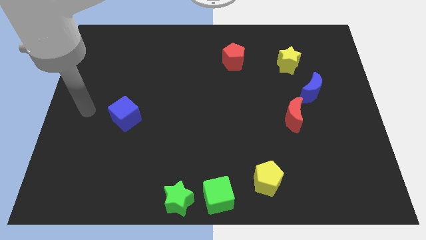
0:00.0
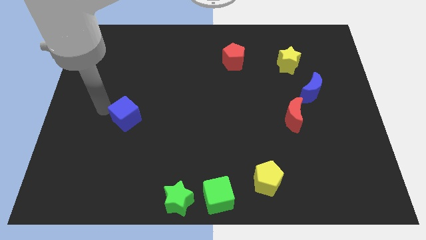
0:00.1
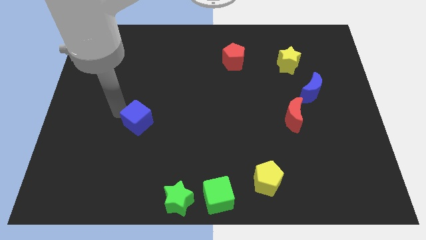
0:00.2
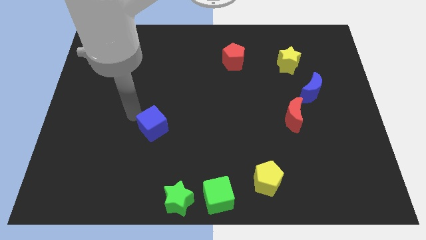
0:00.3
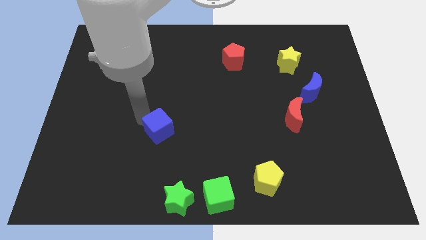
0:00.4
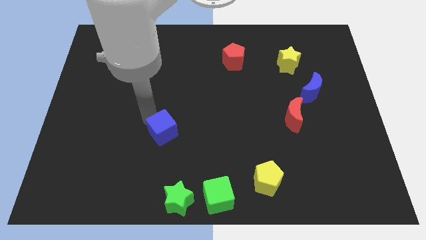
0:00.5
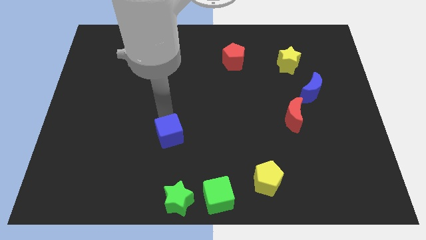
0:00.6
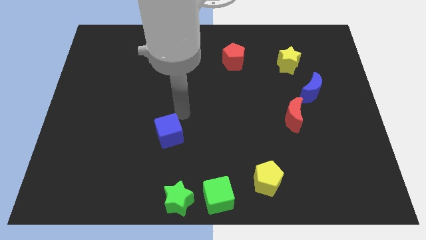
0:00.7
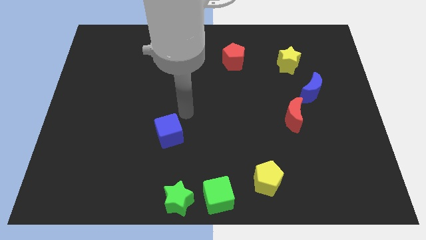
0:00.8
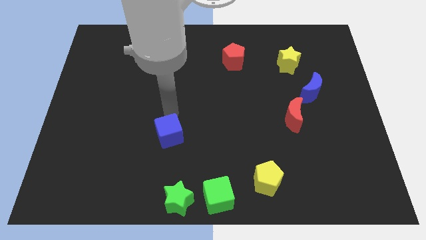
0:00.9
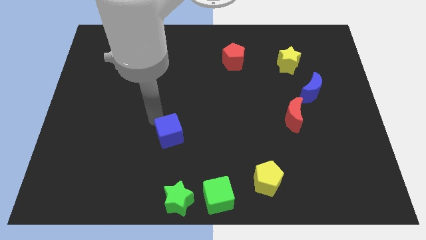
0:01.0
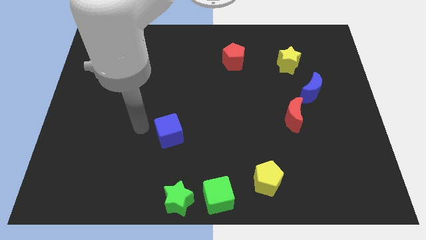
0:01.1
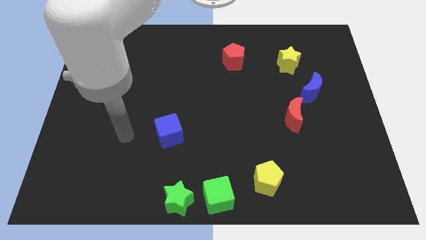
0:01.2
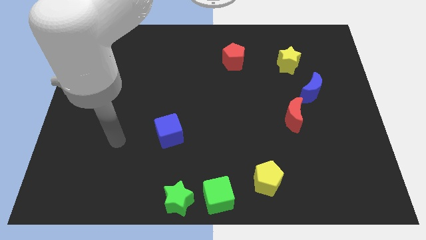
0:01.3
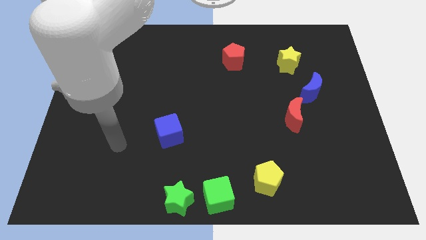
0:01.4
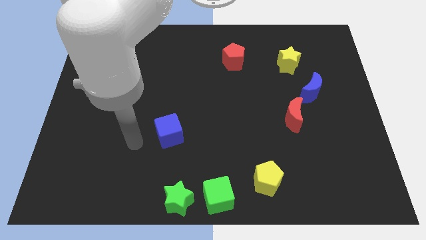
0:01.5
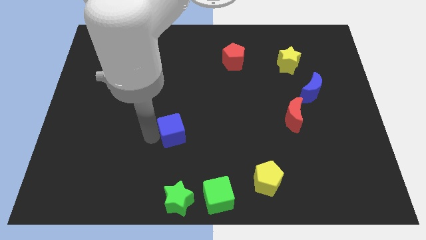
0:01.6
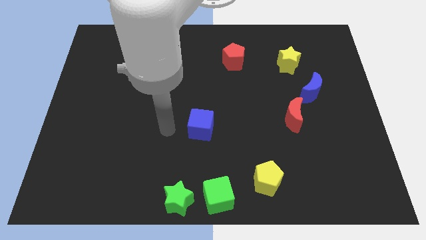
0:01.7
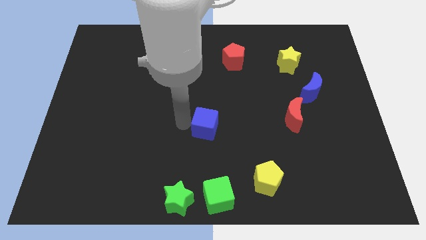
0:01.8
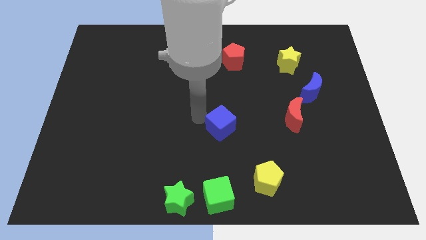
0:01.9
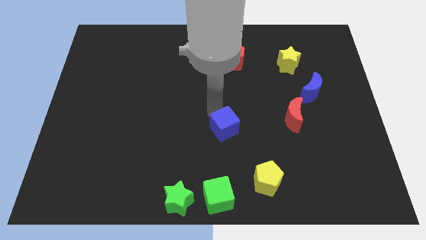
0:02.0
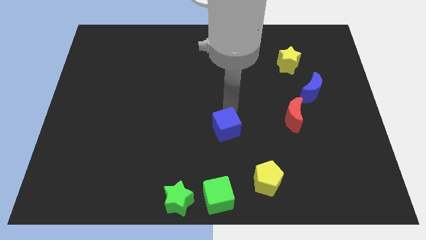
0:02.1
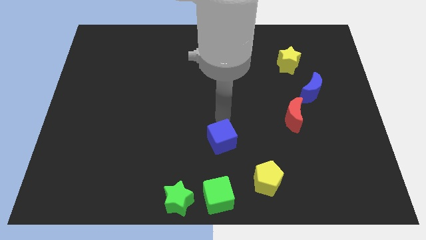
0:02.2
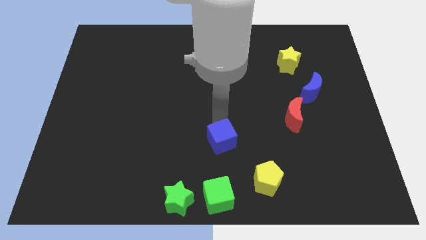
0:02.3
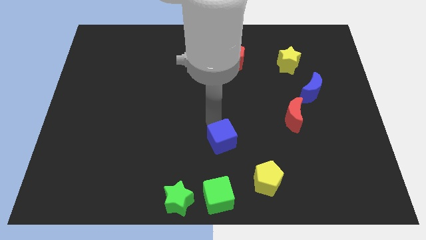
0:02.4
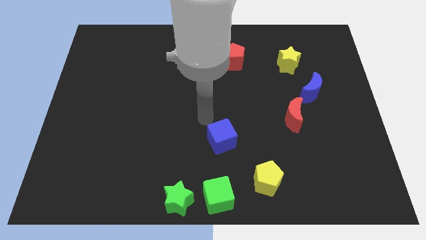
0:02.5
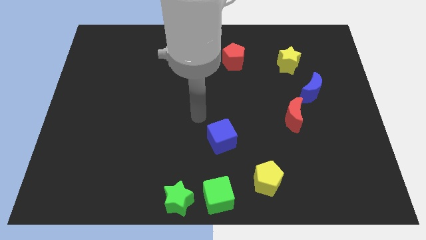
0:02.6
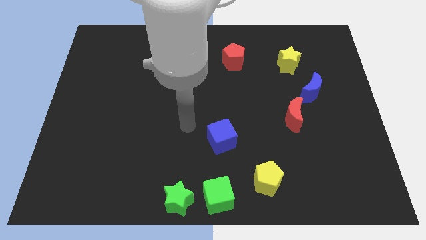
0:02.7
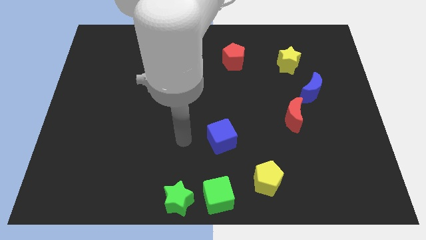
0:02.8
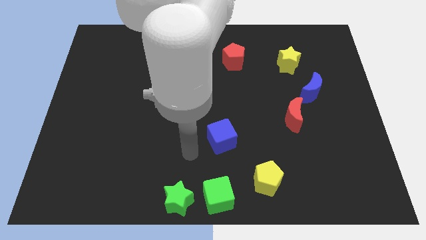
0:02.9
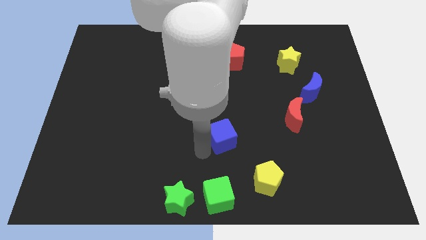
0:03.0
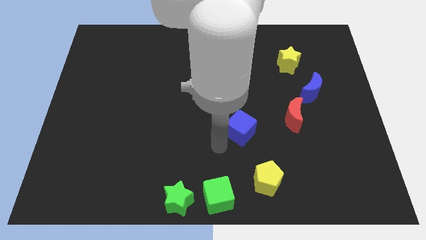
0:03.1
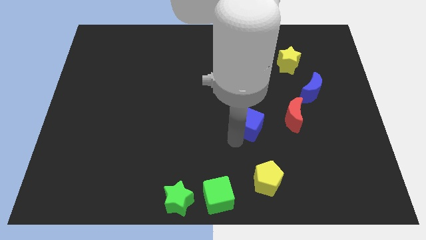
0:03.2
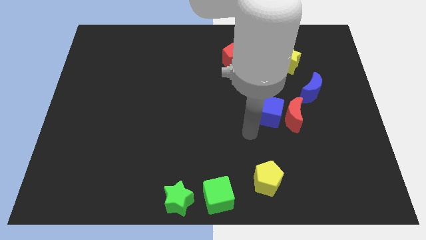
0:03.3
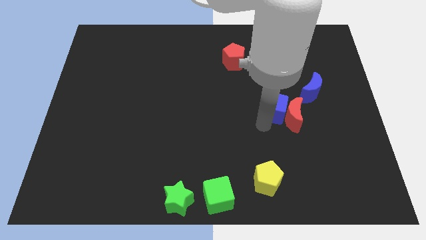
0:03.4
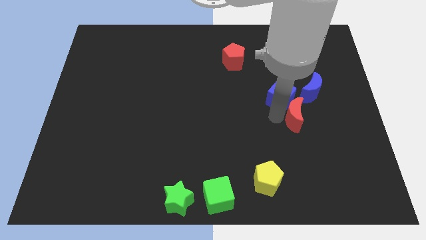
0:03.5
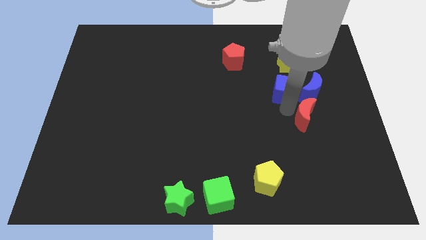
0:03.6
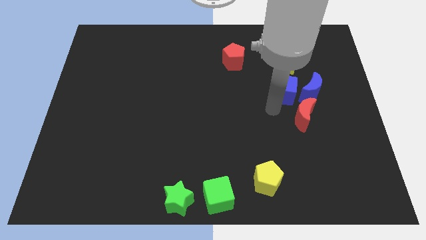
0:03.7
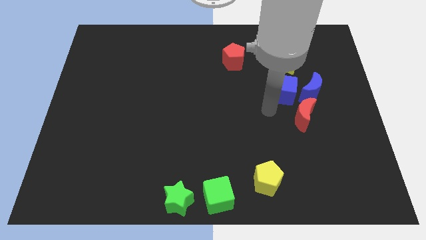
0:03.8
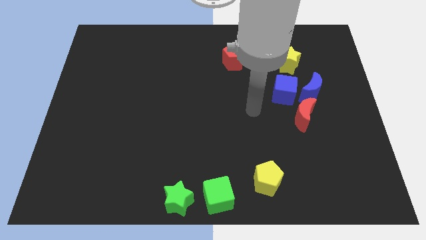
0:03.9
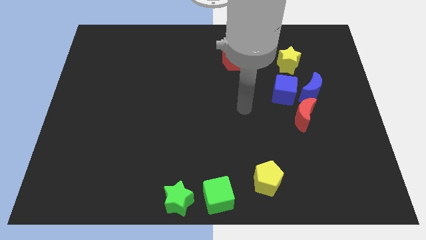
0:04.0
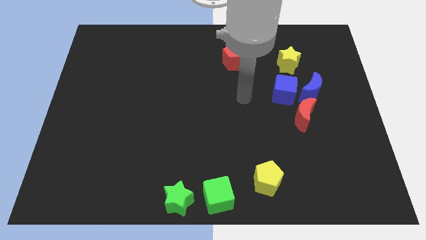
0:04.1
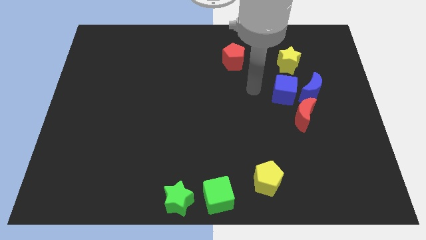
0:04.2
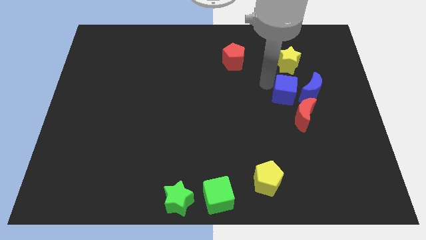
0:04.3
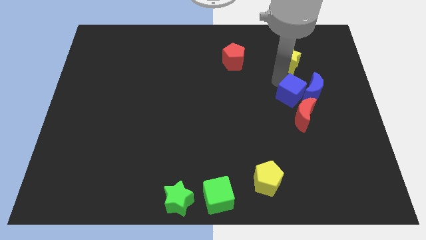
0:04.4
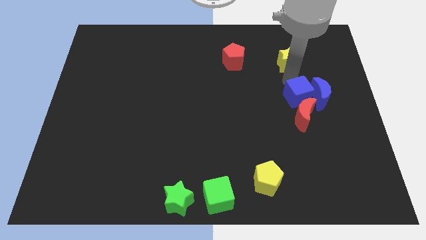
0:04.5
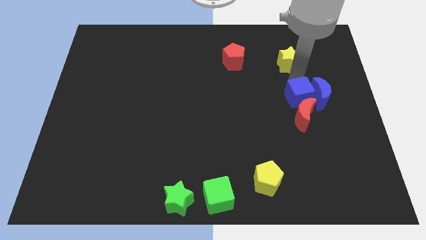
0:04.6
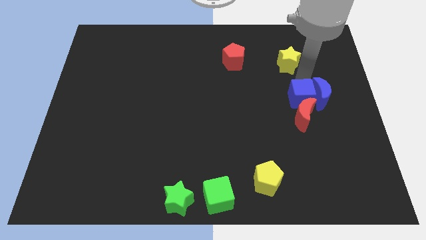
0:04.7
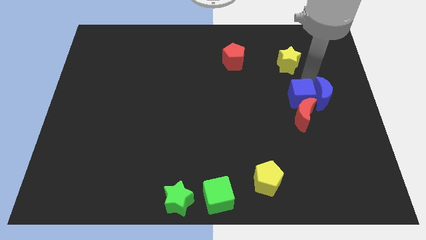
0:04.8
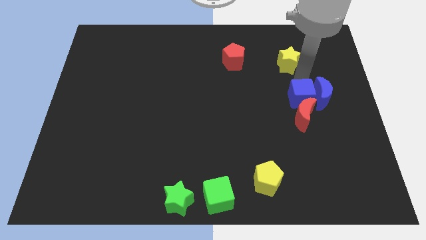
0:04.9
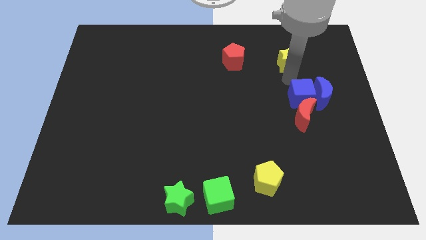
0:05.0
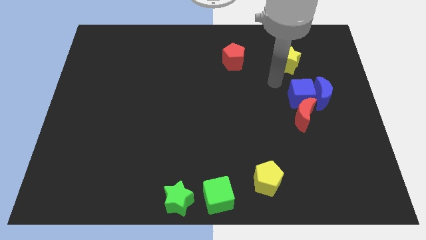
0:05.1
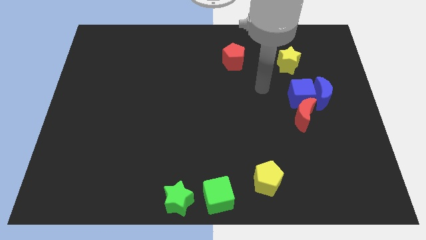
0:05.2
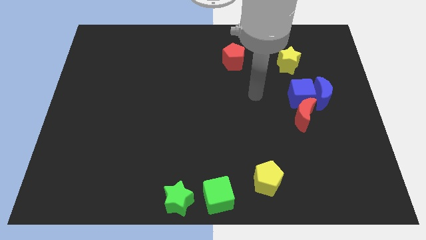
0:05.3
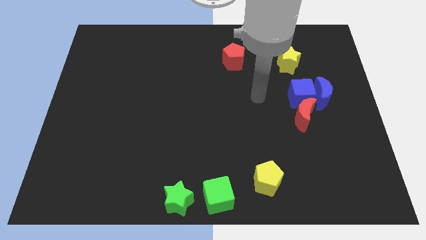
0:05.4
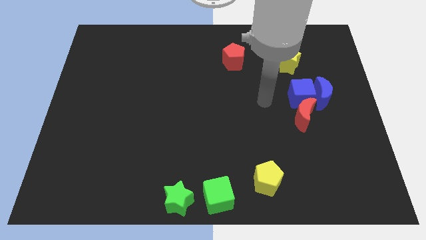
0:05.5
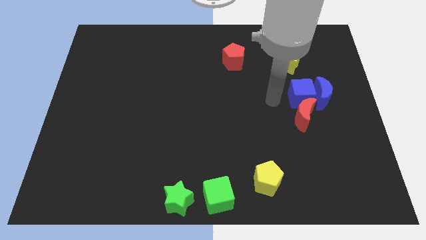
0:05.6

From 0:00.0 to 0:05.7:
move the blue cube to the left of the blue moon

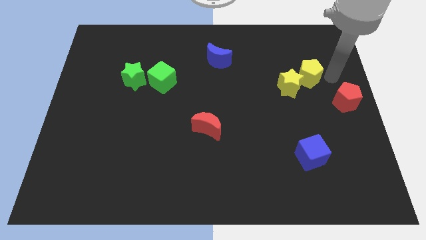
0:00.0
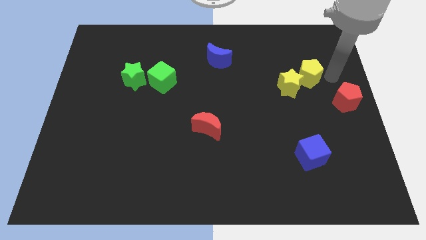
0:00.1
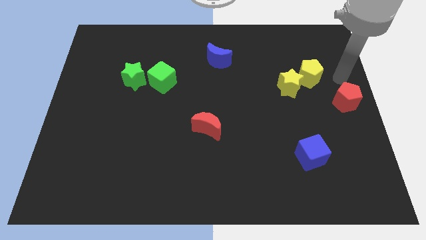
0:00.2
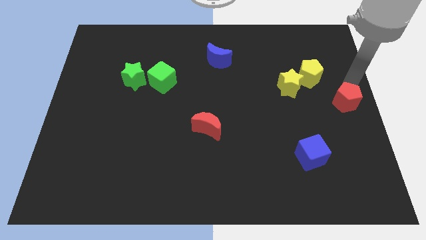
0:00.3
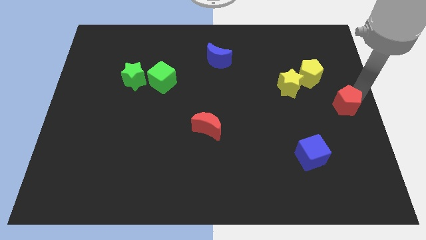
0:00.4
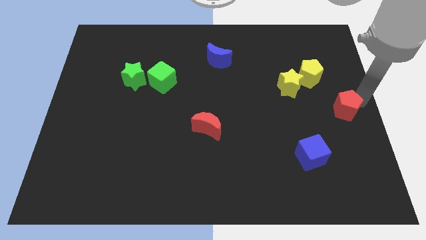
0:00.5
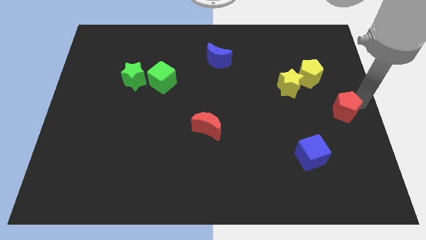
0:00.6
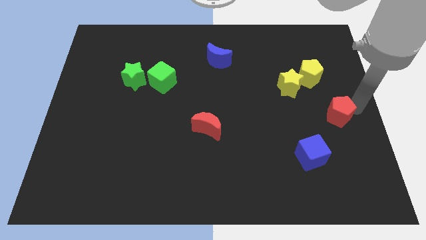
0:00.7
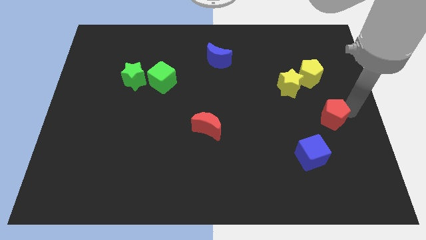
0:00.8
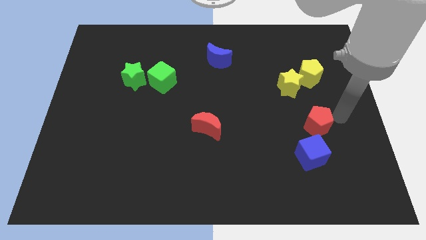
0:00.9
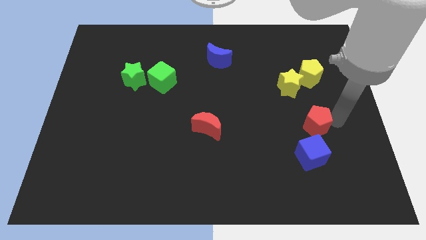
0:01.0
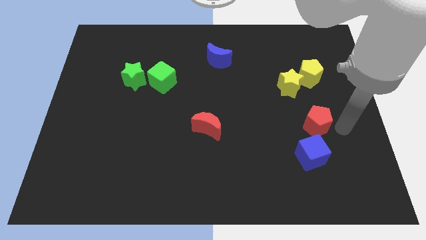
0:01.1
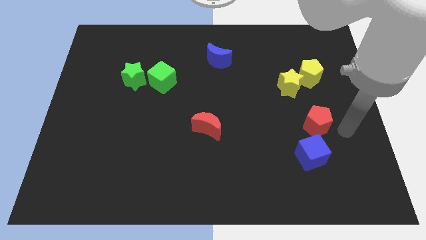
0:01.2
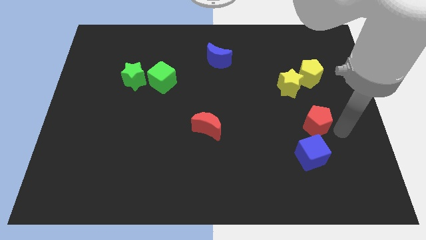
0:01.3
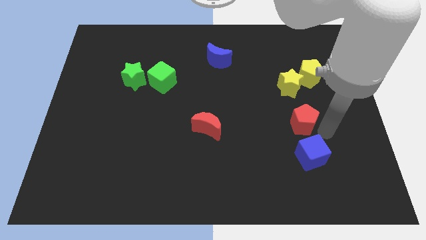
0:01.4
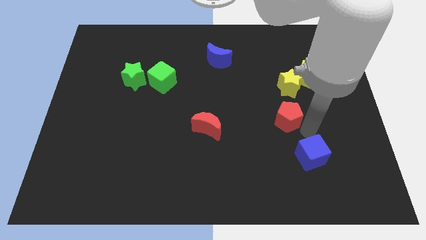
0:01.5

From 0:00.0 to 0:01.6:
place the red pentagon on top of blue cube

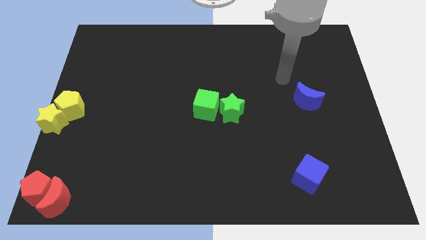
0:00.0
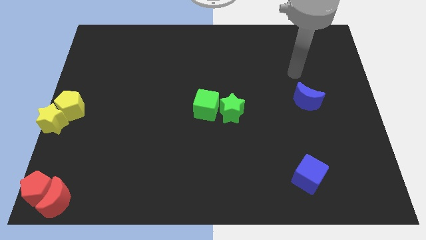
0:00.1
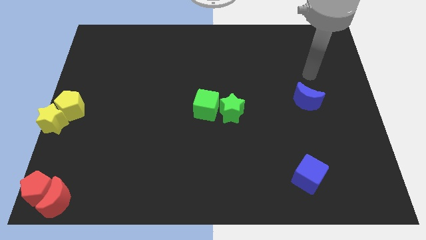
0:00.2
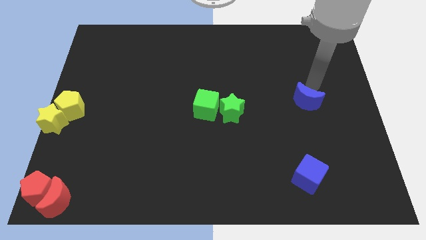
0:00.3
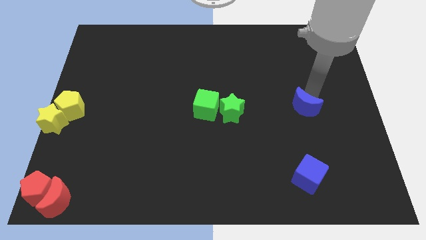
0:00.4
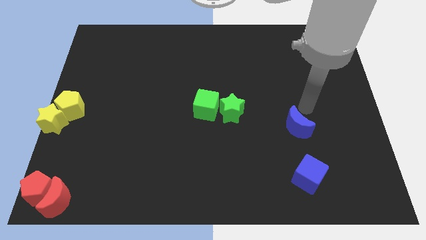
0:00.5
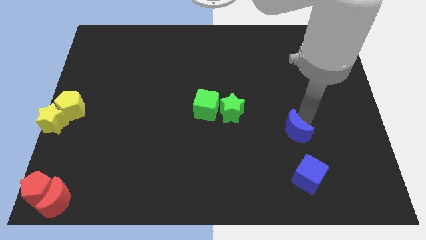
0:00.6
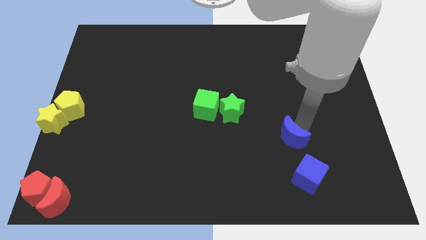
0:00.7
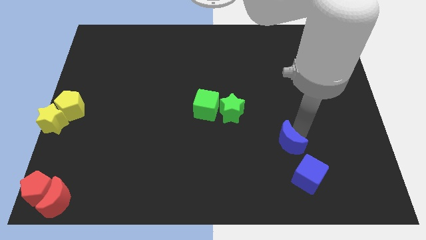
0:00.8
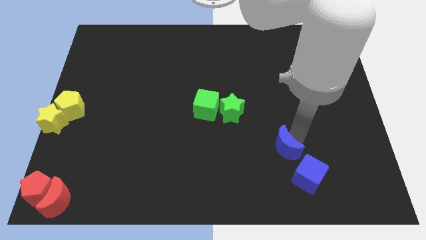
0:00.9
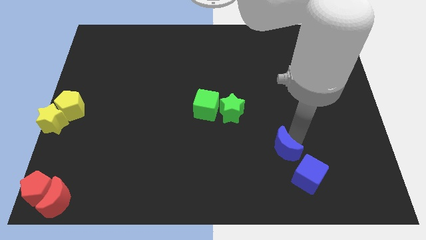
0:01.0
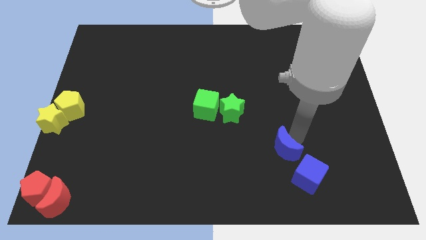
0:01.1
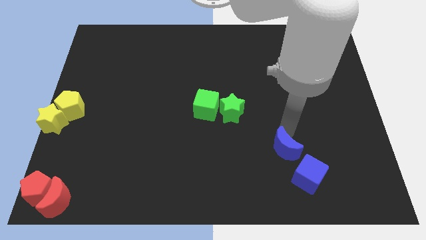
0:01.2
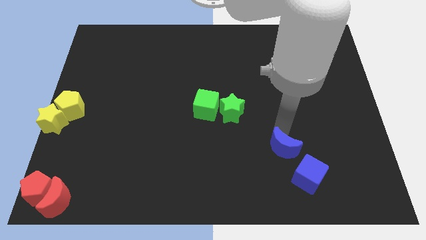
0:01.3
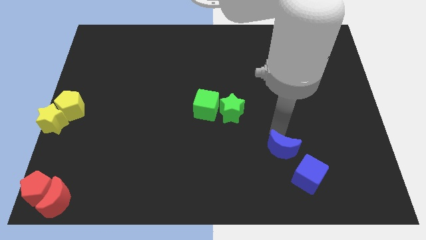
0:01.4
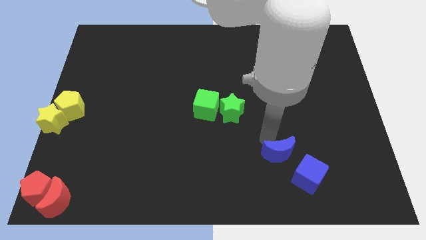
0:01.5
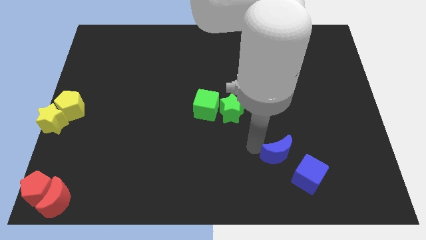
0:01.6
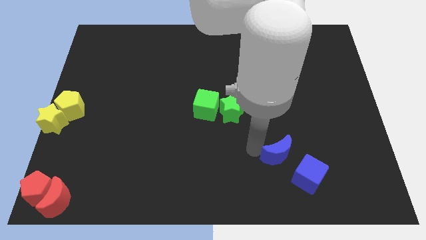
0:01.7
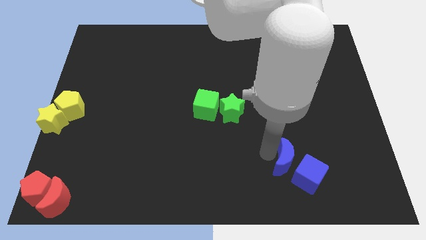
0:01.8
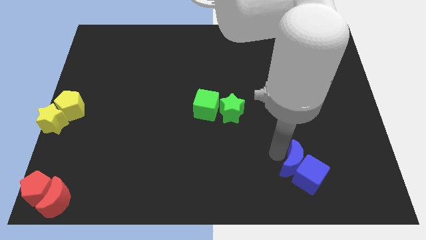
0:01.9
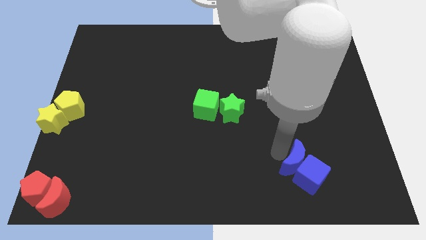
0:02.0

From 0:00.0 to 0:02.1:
add blue moon into blue cube
